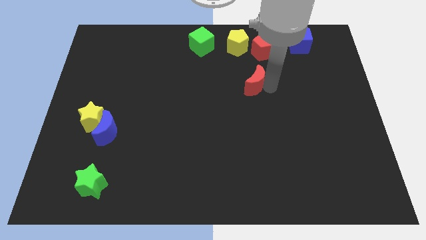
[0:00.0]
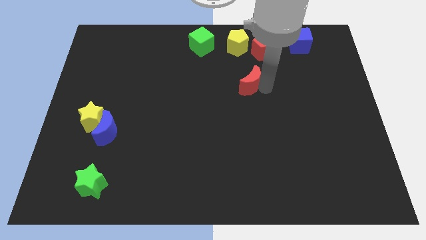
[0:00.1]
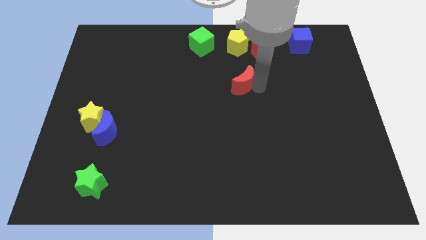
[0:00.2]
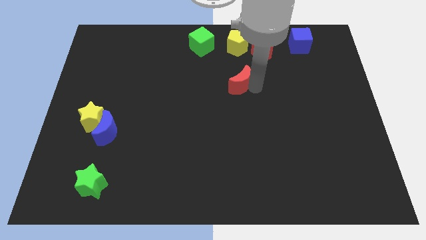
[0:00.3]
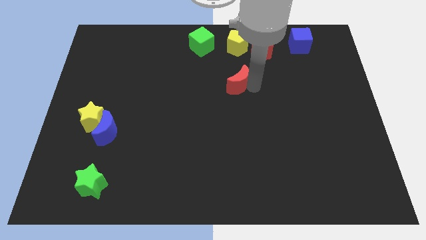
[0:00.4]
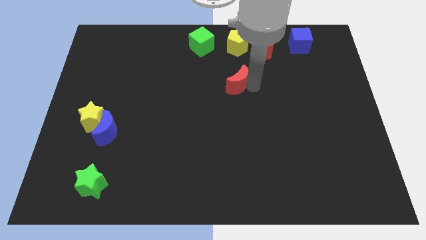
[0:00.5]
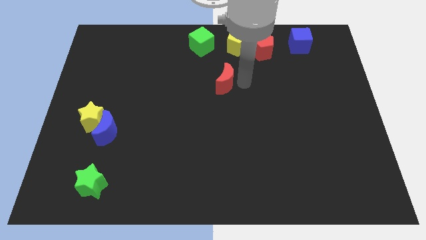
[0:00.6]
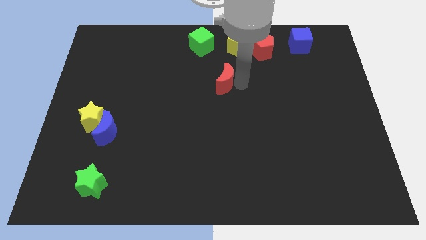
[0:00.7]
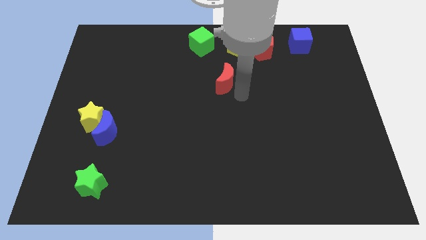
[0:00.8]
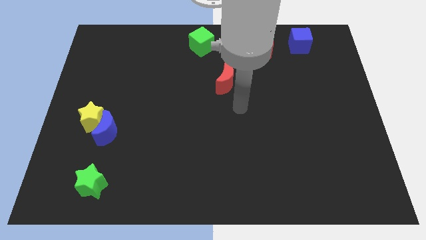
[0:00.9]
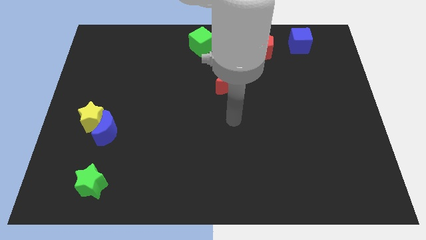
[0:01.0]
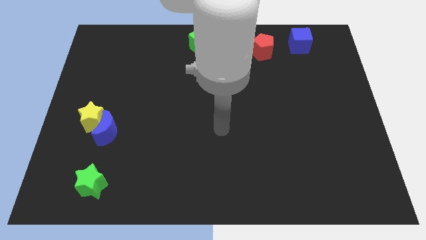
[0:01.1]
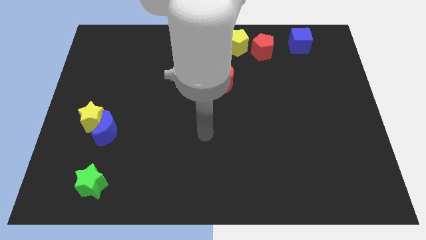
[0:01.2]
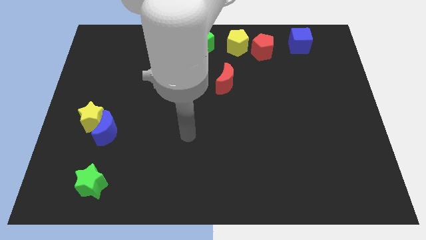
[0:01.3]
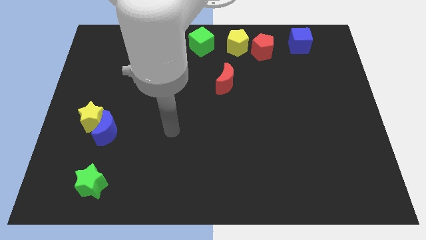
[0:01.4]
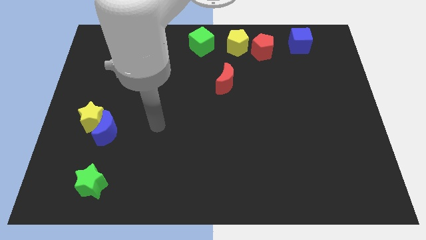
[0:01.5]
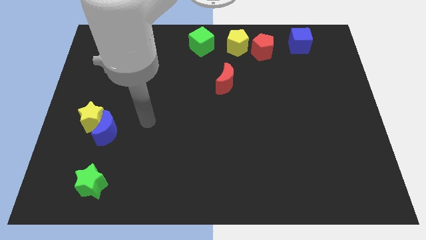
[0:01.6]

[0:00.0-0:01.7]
place the red crescent below the yellow pentagon

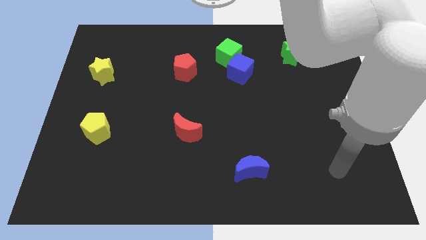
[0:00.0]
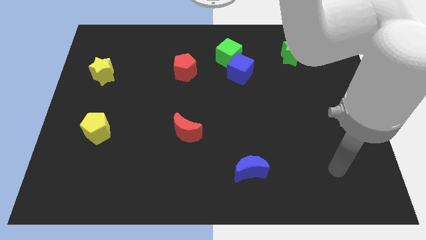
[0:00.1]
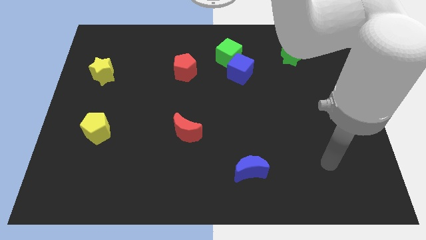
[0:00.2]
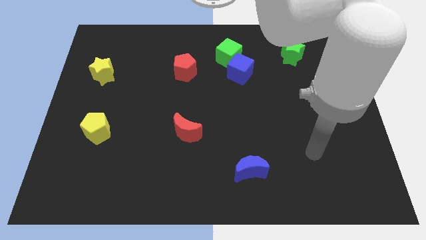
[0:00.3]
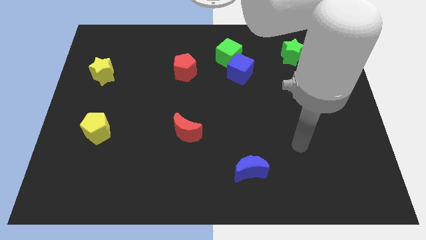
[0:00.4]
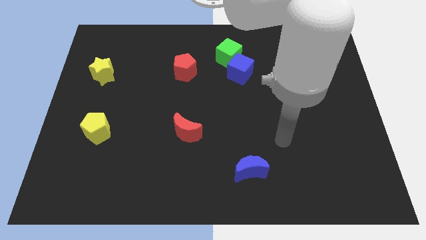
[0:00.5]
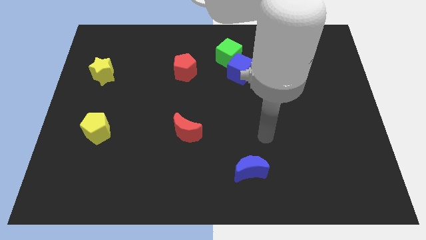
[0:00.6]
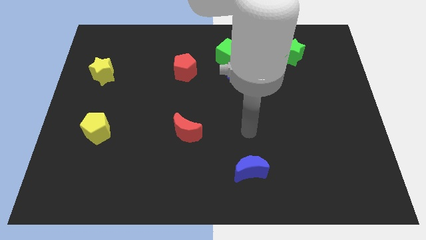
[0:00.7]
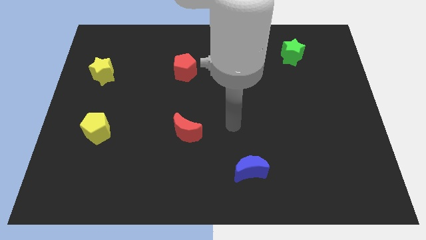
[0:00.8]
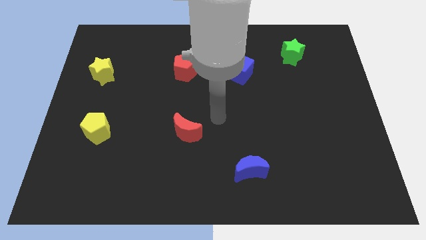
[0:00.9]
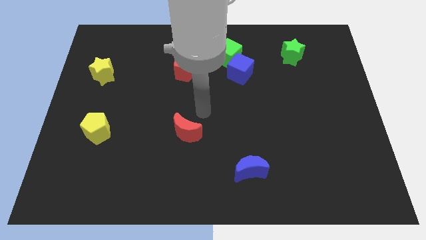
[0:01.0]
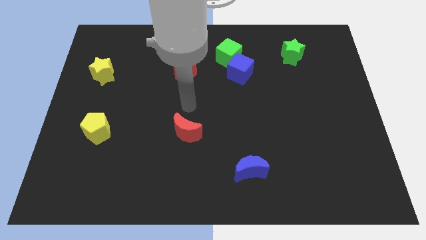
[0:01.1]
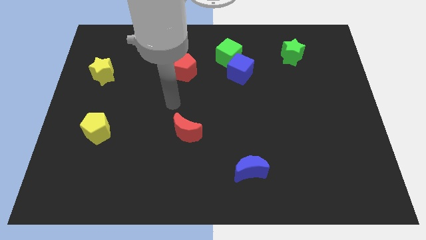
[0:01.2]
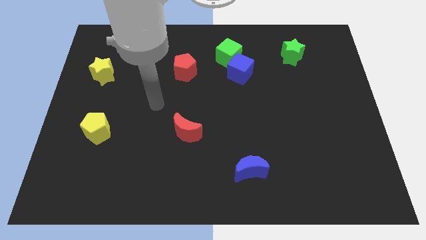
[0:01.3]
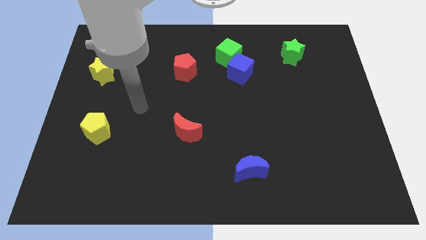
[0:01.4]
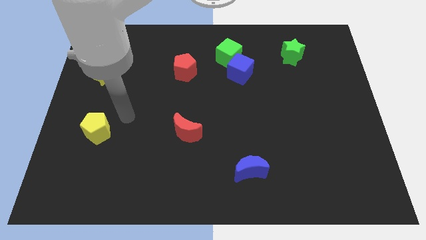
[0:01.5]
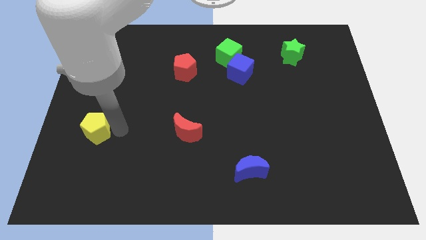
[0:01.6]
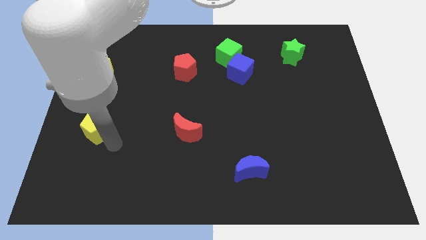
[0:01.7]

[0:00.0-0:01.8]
place your arm on the left side of the yellow pentagon

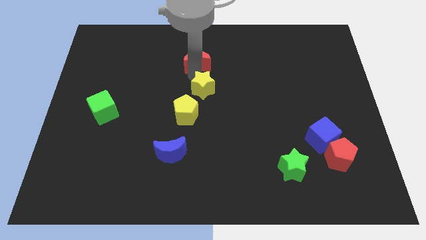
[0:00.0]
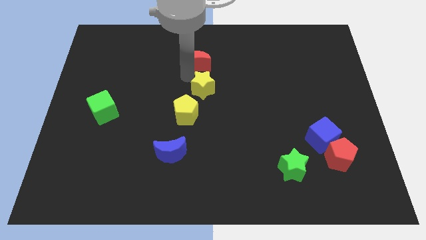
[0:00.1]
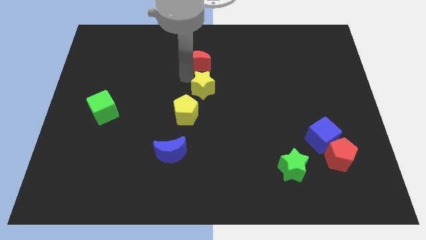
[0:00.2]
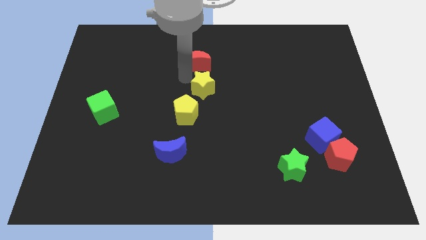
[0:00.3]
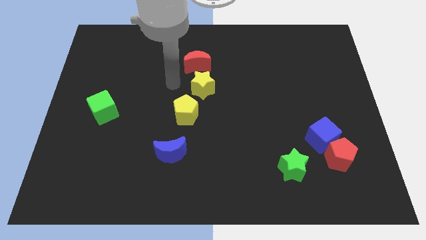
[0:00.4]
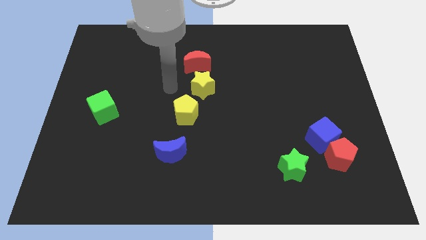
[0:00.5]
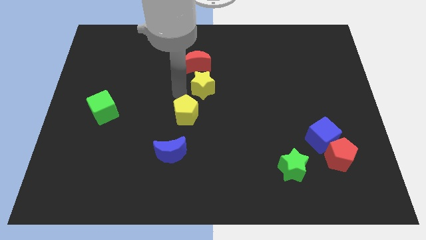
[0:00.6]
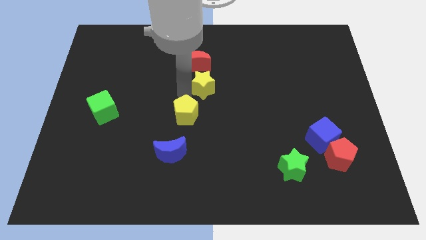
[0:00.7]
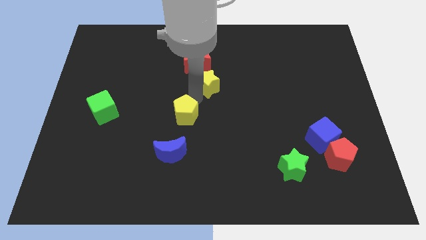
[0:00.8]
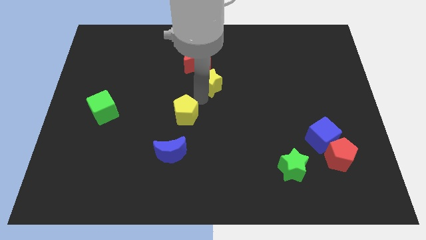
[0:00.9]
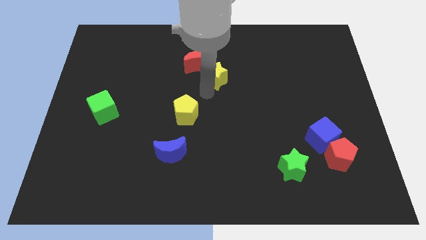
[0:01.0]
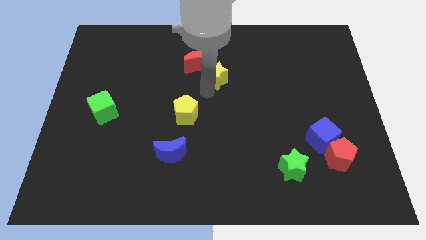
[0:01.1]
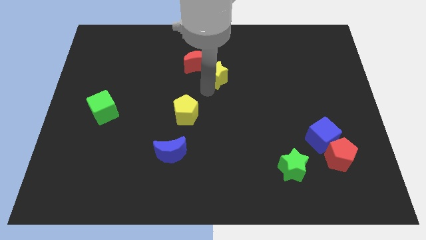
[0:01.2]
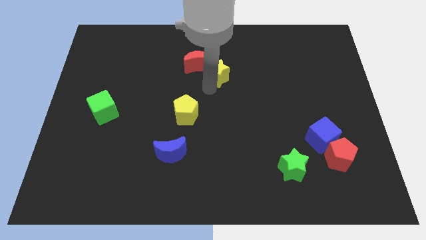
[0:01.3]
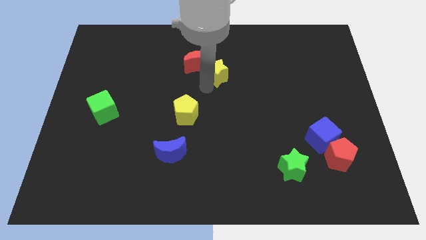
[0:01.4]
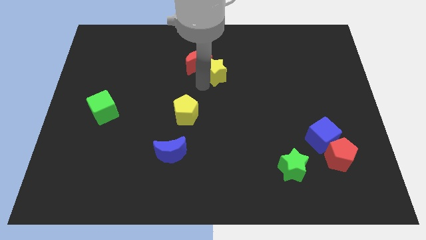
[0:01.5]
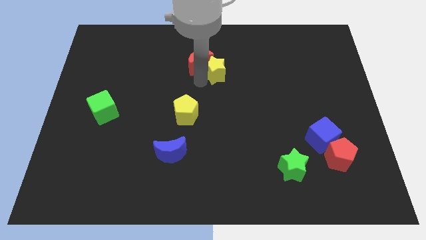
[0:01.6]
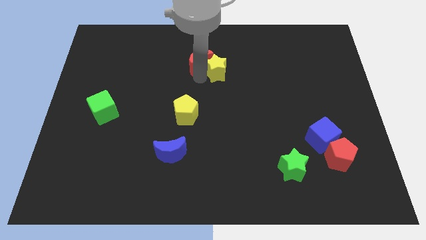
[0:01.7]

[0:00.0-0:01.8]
push the yellow star into the red crescent

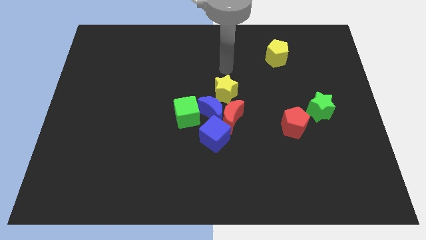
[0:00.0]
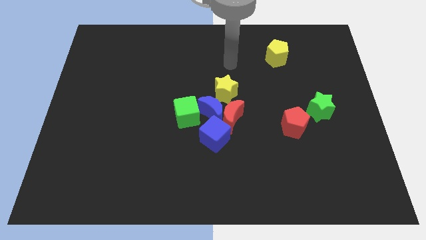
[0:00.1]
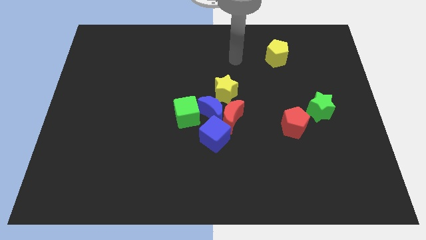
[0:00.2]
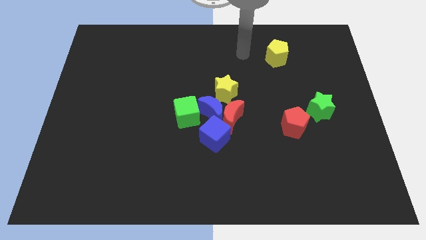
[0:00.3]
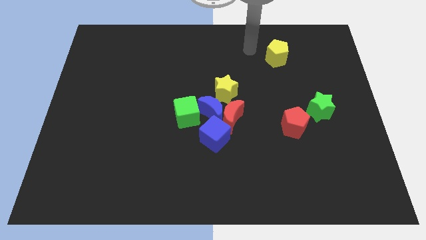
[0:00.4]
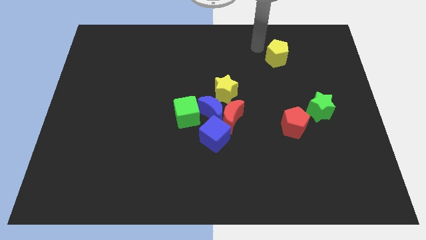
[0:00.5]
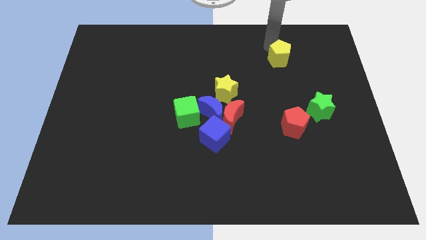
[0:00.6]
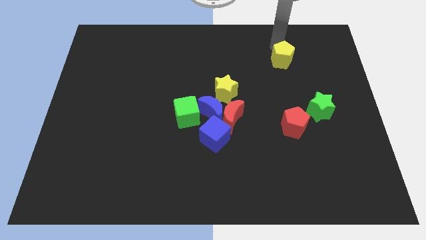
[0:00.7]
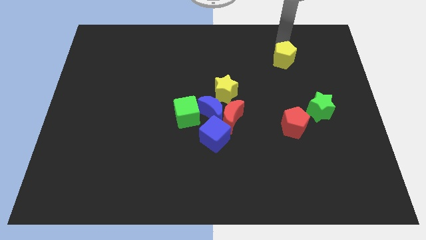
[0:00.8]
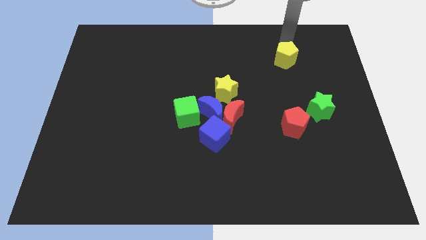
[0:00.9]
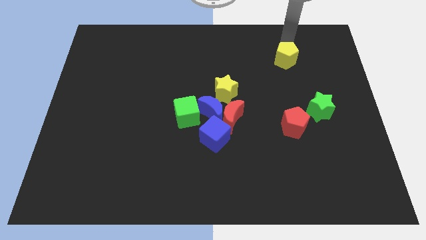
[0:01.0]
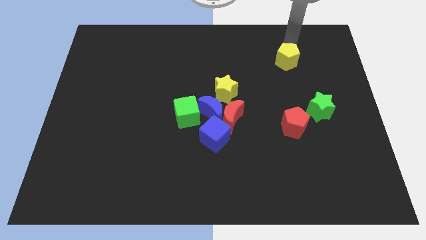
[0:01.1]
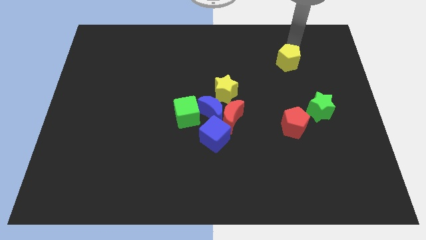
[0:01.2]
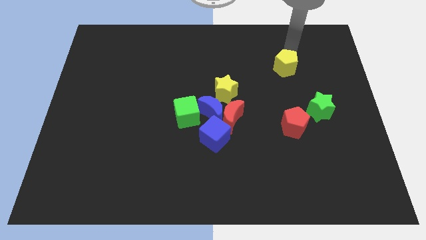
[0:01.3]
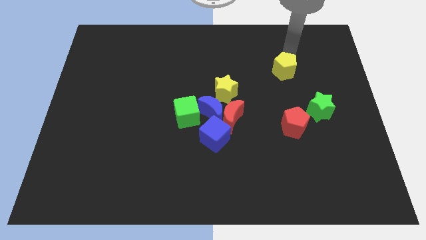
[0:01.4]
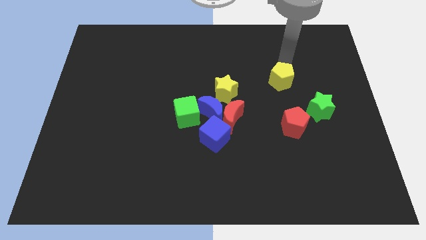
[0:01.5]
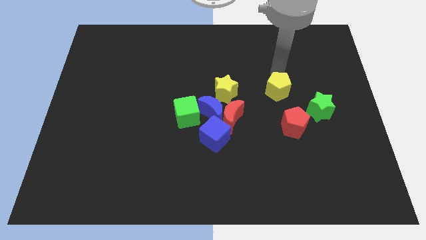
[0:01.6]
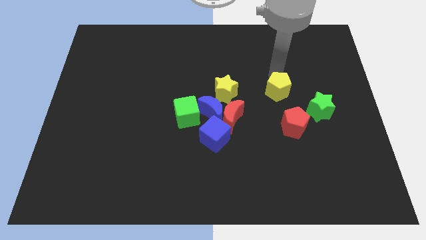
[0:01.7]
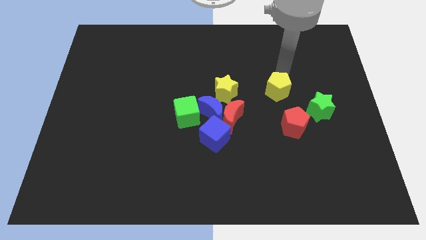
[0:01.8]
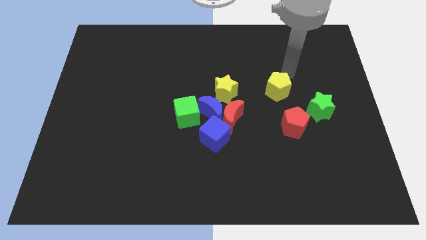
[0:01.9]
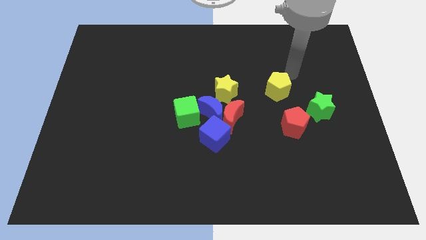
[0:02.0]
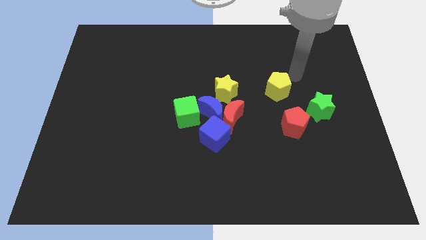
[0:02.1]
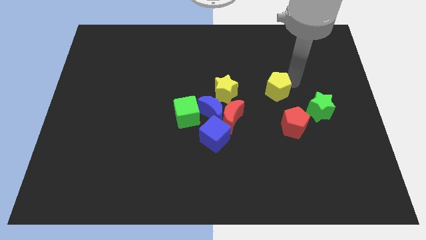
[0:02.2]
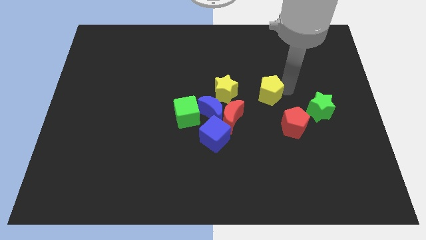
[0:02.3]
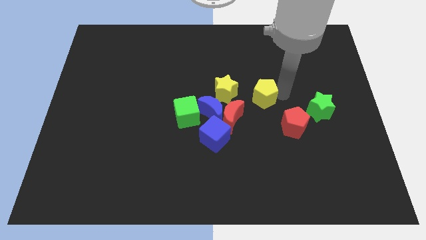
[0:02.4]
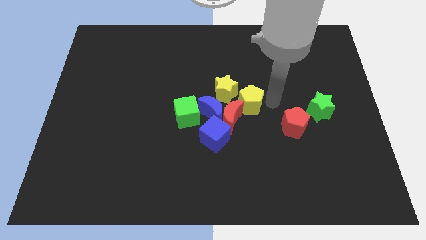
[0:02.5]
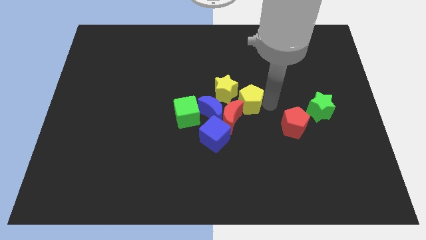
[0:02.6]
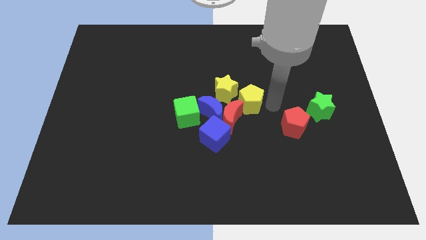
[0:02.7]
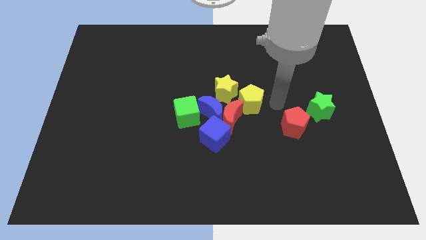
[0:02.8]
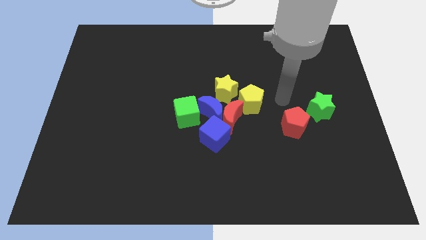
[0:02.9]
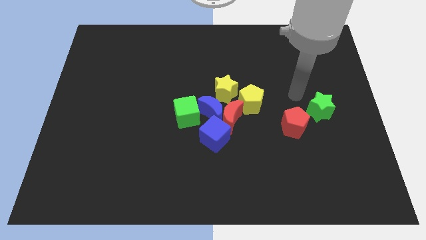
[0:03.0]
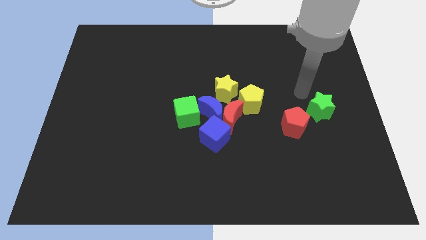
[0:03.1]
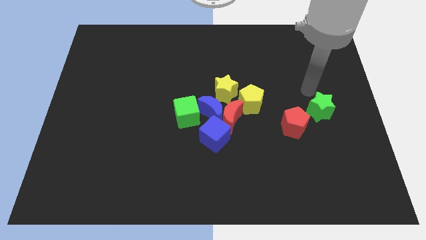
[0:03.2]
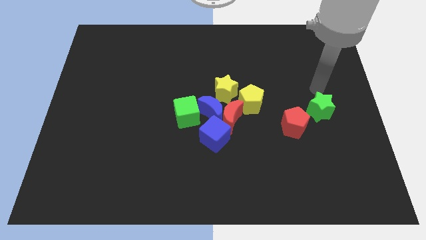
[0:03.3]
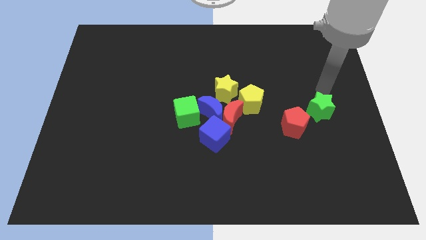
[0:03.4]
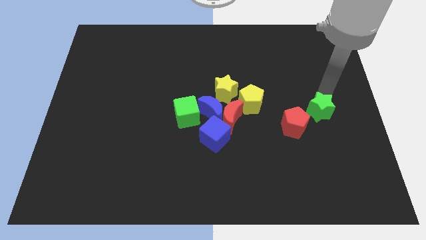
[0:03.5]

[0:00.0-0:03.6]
push the yellow pentagon to the group of blocks

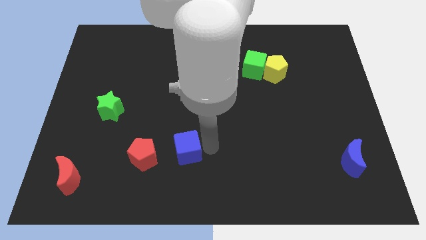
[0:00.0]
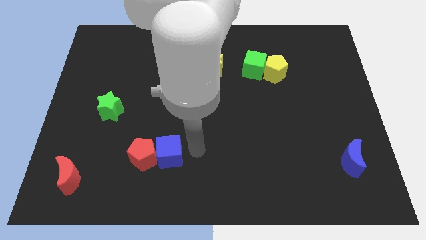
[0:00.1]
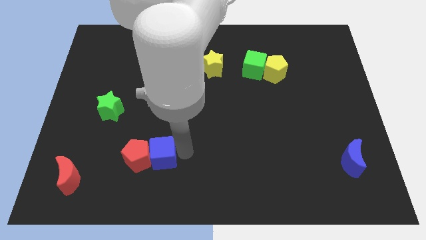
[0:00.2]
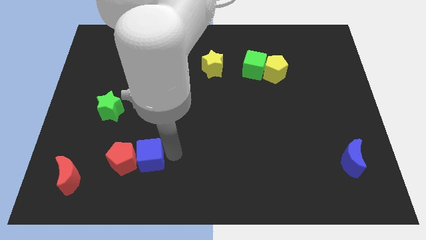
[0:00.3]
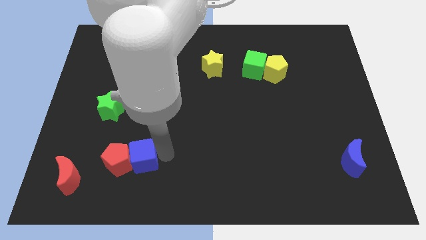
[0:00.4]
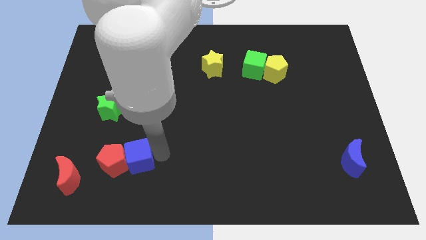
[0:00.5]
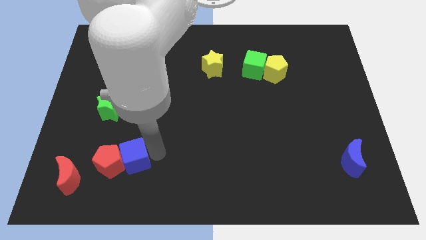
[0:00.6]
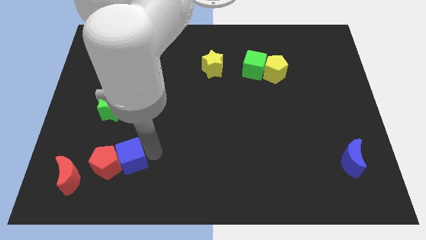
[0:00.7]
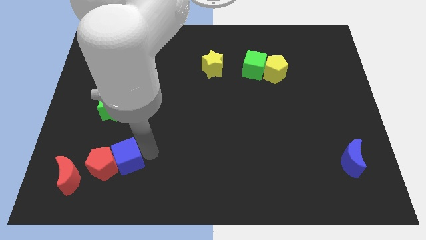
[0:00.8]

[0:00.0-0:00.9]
move the blue cube to the right of the red pentagon
